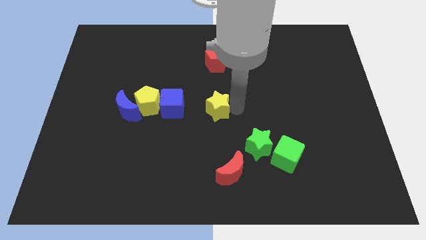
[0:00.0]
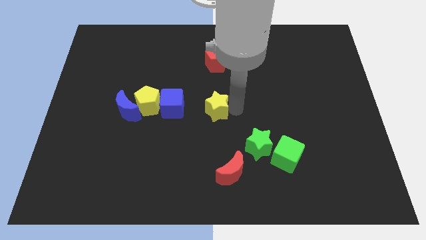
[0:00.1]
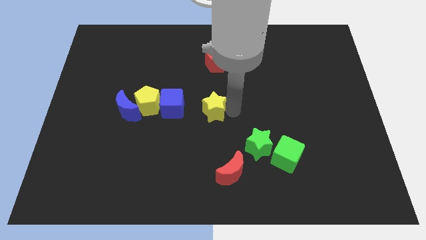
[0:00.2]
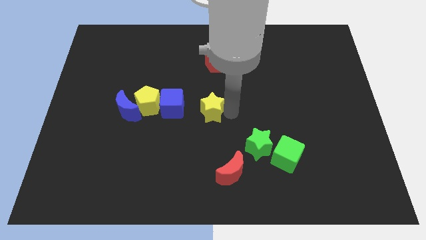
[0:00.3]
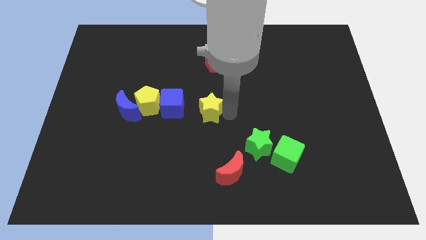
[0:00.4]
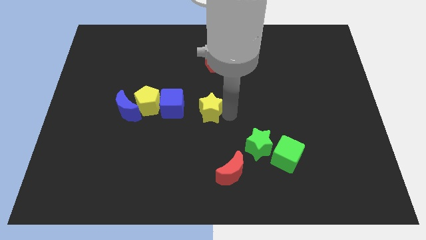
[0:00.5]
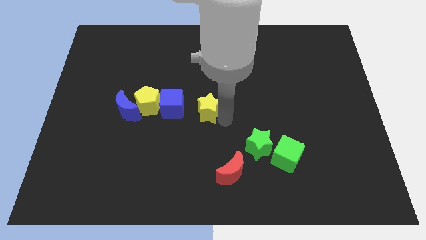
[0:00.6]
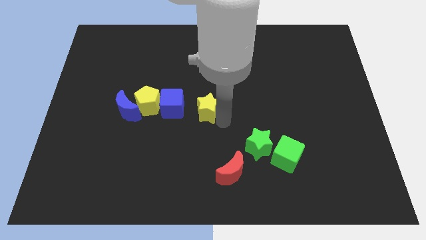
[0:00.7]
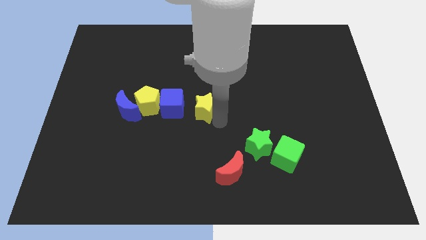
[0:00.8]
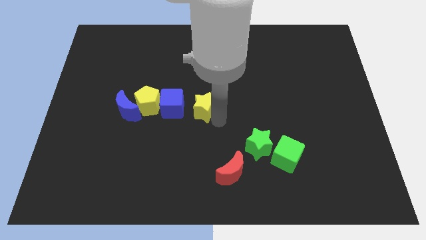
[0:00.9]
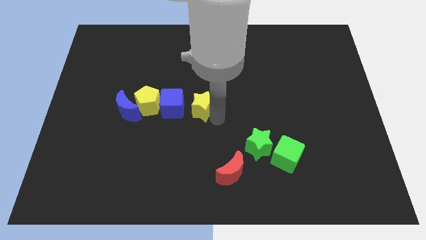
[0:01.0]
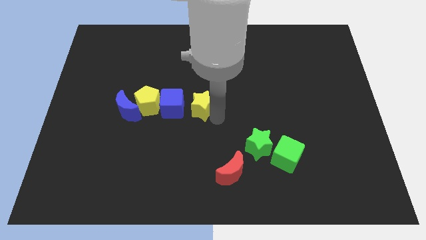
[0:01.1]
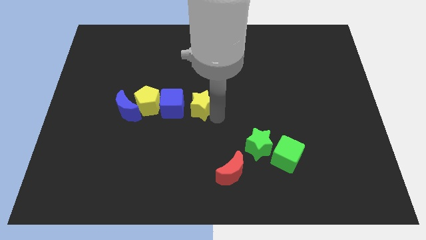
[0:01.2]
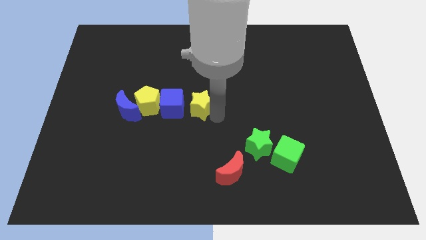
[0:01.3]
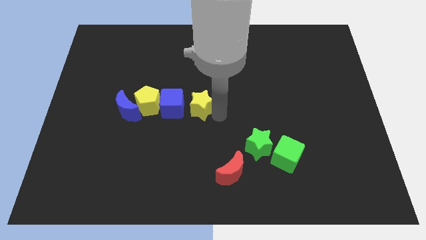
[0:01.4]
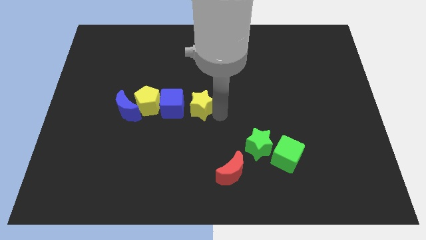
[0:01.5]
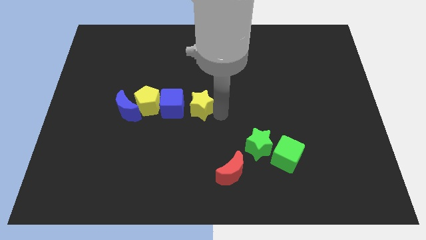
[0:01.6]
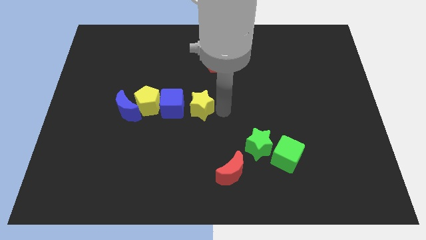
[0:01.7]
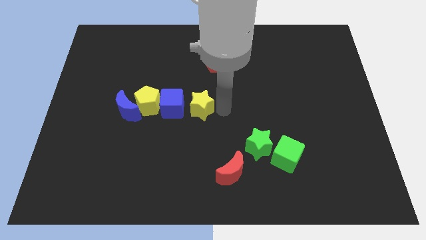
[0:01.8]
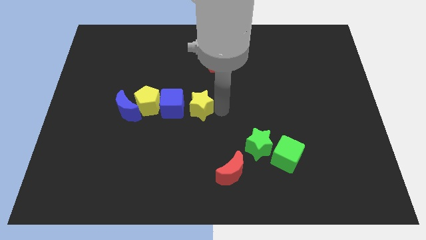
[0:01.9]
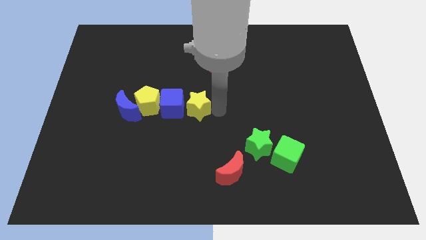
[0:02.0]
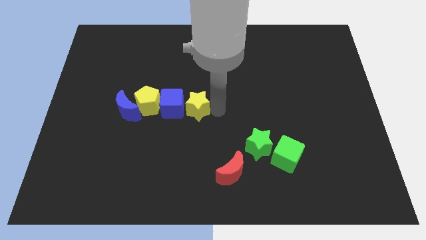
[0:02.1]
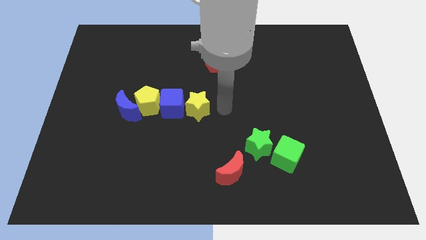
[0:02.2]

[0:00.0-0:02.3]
move the yellow star right to the blue cube

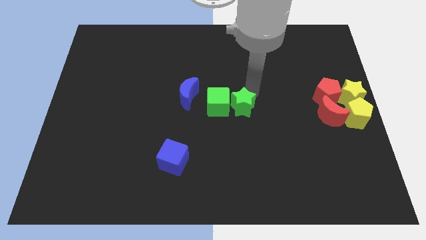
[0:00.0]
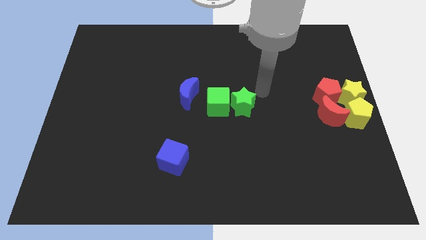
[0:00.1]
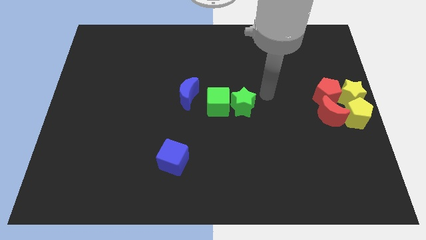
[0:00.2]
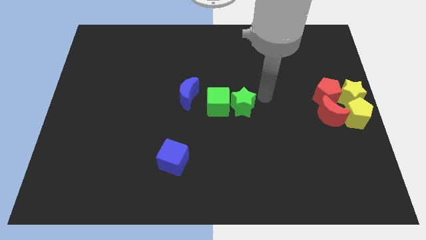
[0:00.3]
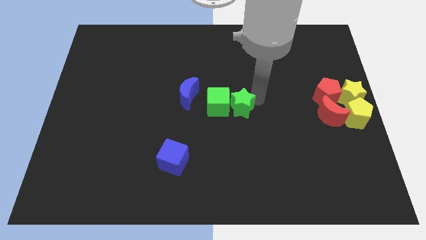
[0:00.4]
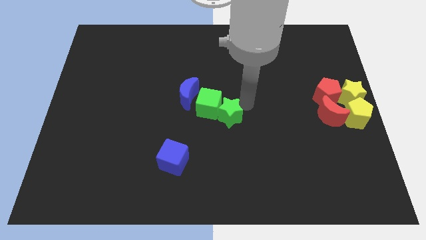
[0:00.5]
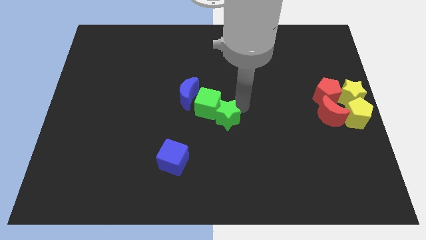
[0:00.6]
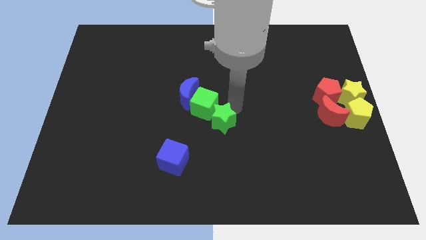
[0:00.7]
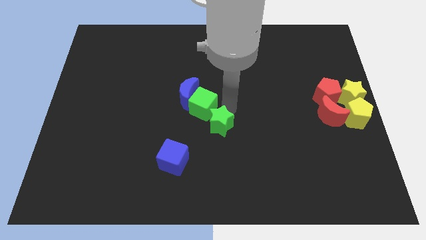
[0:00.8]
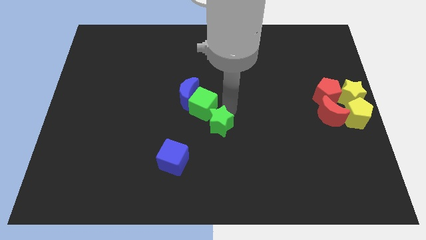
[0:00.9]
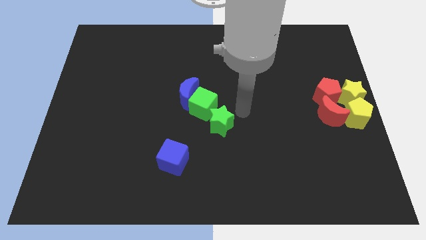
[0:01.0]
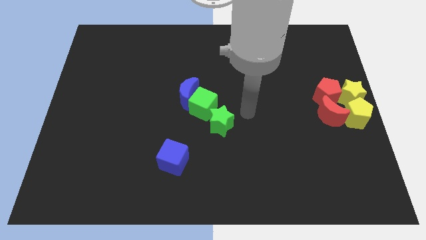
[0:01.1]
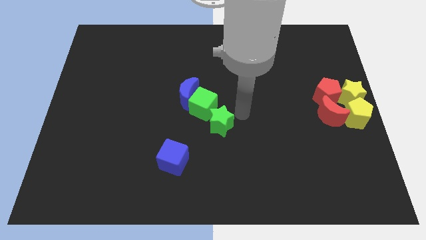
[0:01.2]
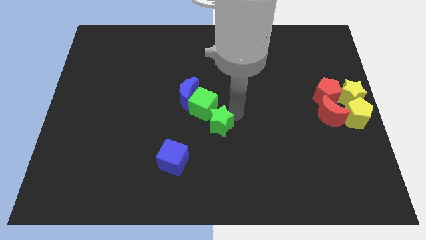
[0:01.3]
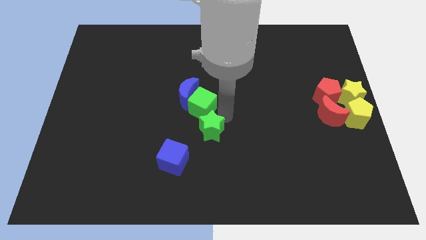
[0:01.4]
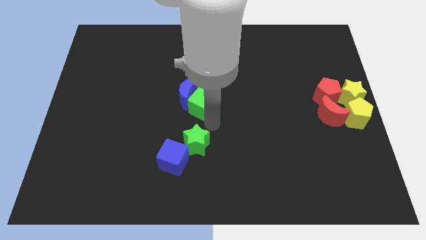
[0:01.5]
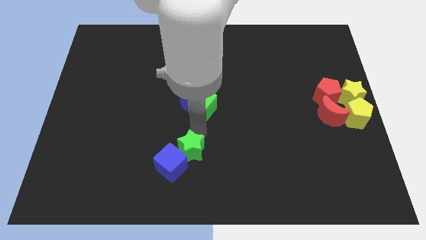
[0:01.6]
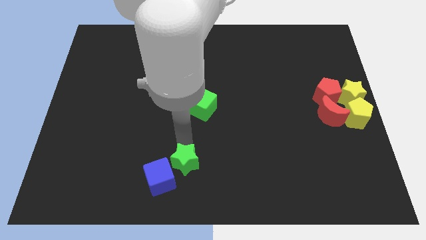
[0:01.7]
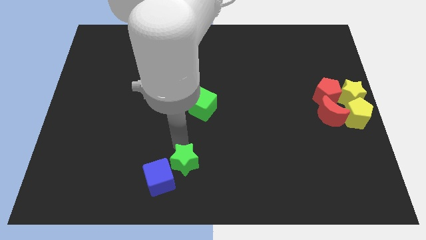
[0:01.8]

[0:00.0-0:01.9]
separate green star from the green cube

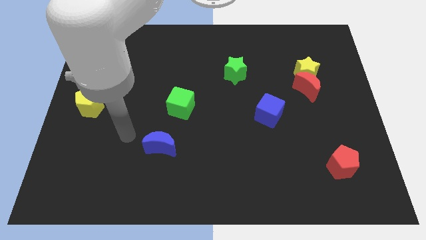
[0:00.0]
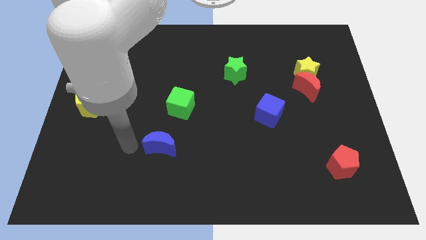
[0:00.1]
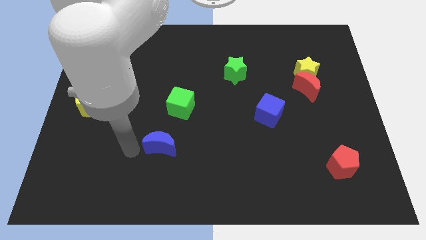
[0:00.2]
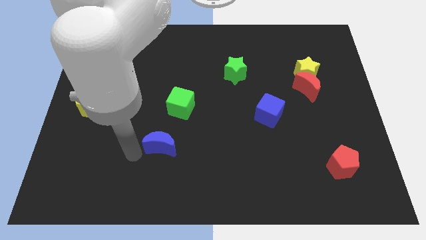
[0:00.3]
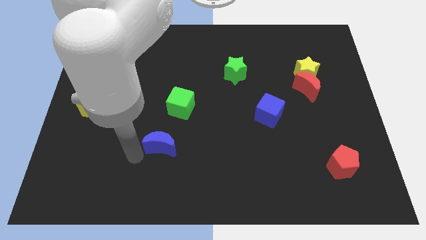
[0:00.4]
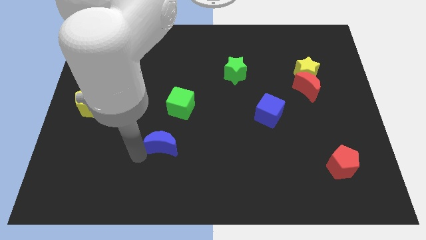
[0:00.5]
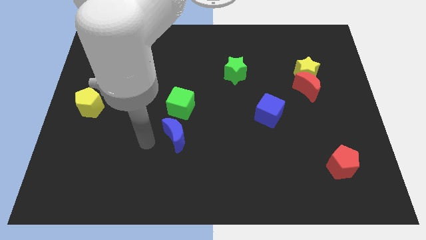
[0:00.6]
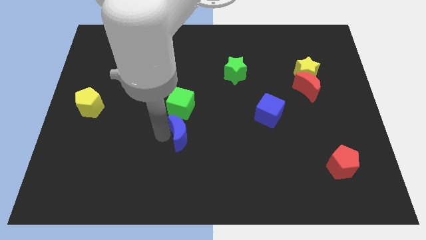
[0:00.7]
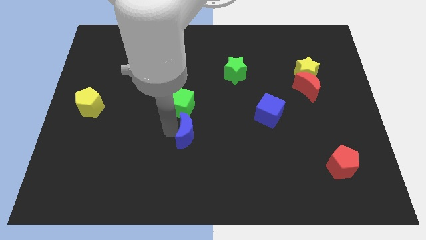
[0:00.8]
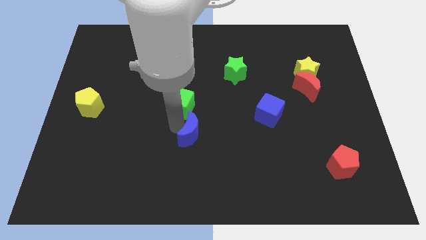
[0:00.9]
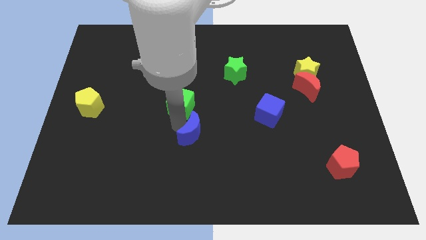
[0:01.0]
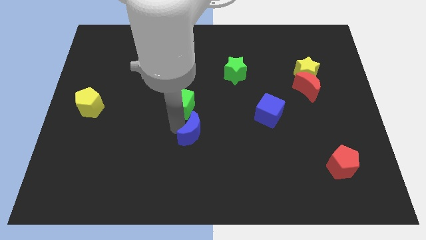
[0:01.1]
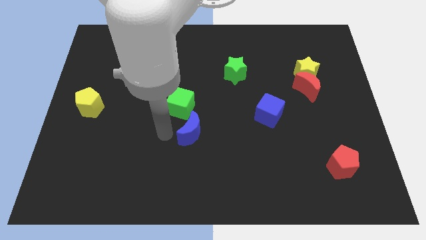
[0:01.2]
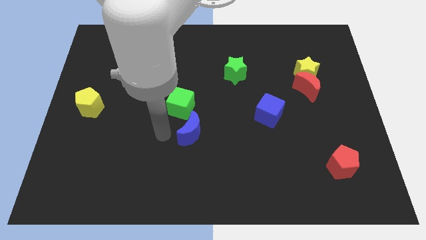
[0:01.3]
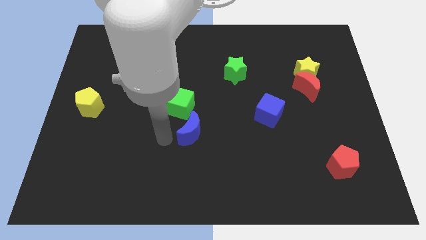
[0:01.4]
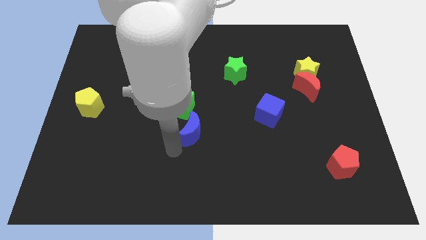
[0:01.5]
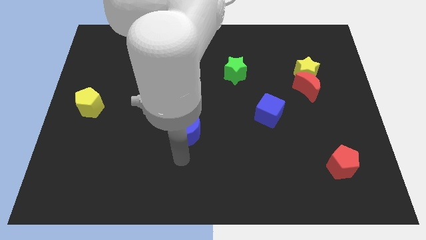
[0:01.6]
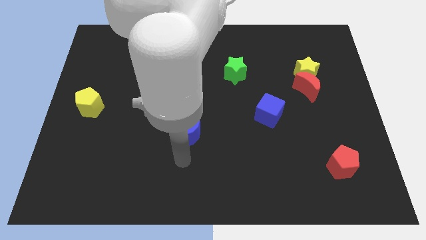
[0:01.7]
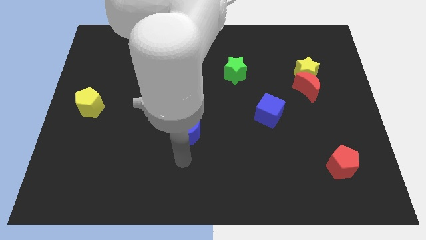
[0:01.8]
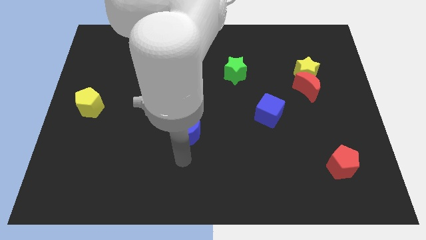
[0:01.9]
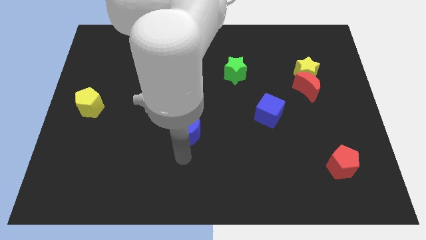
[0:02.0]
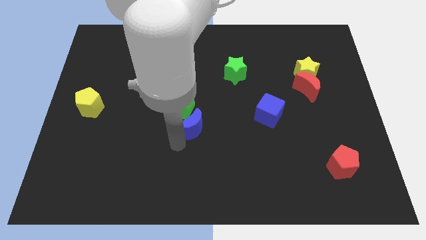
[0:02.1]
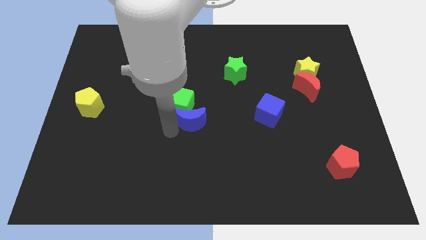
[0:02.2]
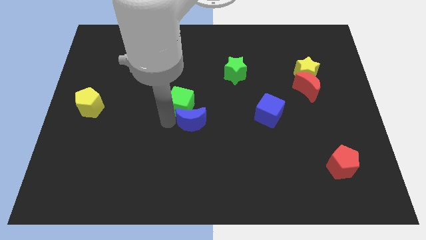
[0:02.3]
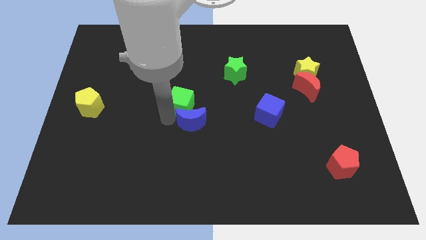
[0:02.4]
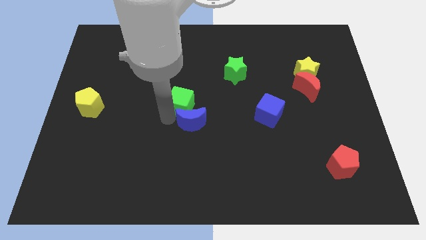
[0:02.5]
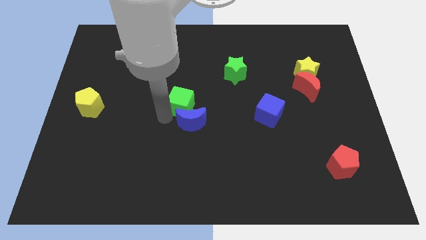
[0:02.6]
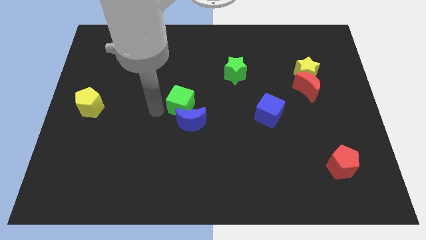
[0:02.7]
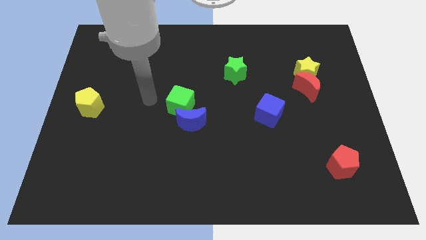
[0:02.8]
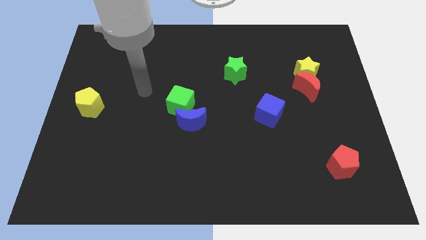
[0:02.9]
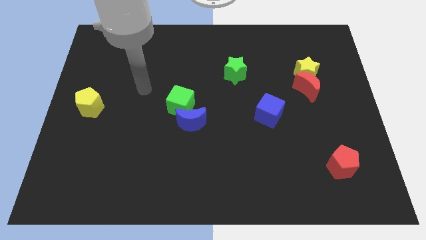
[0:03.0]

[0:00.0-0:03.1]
push blue moon to green cube

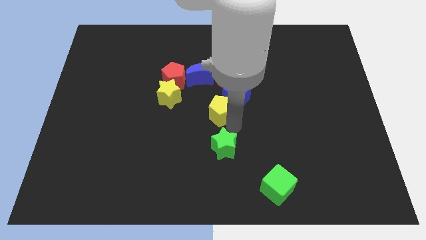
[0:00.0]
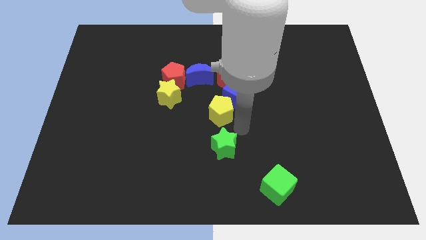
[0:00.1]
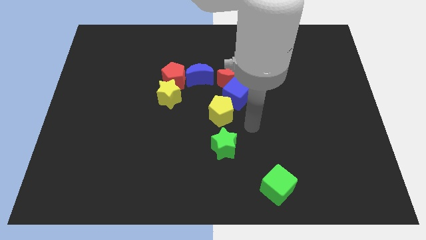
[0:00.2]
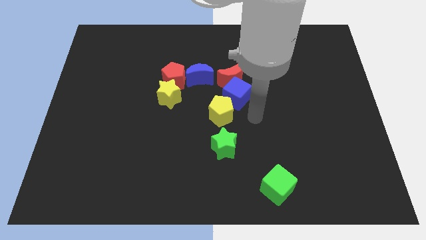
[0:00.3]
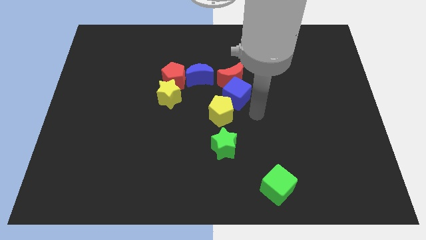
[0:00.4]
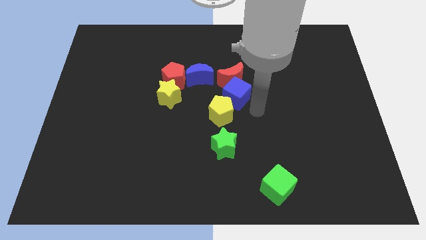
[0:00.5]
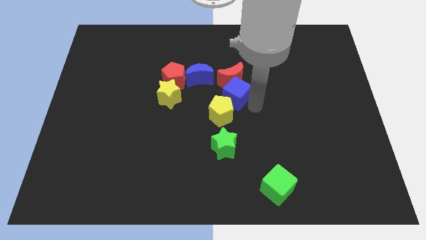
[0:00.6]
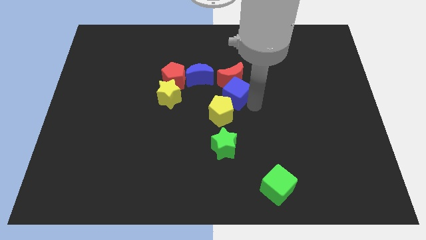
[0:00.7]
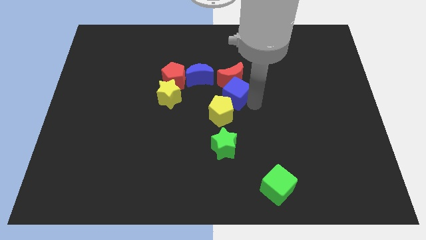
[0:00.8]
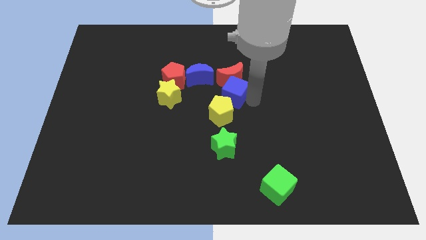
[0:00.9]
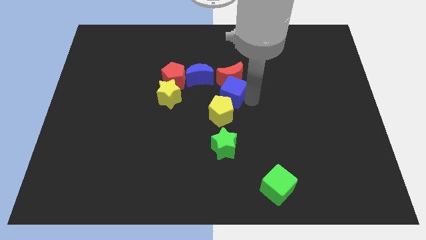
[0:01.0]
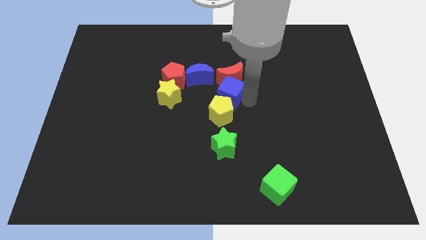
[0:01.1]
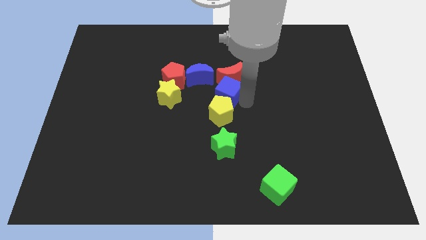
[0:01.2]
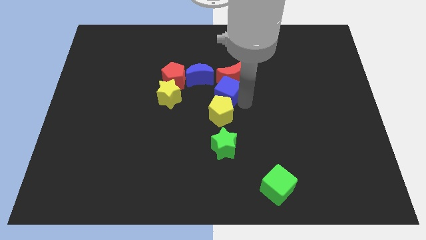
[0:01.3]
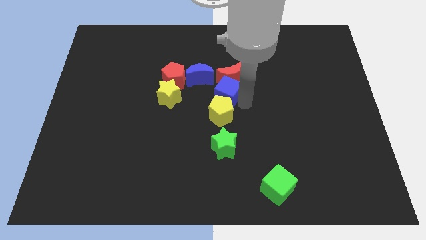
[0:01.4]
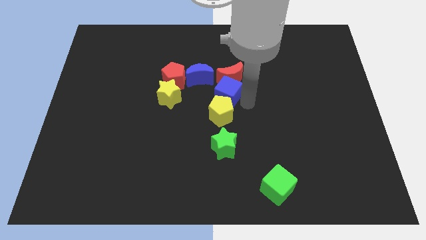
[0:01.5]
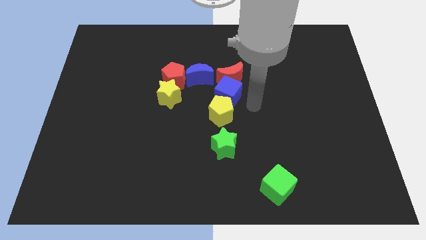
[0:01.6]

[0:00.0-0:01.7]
place the blue cube in between the yellow star and red crescent

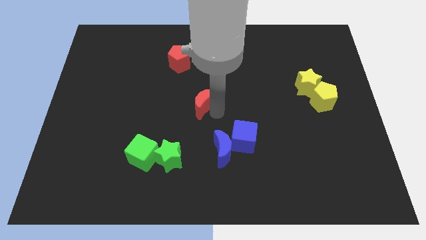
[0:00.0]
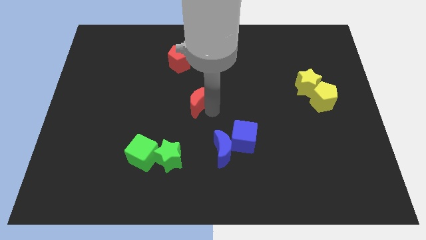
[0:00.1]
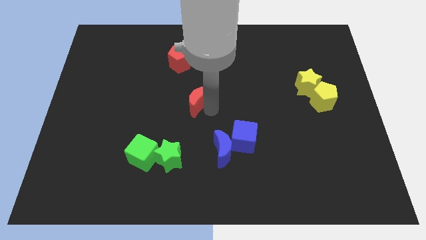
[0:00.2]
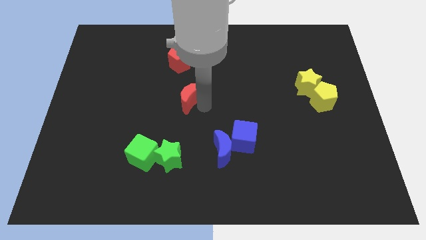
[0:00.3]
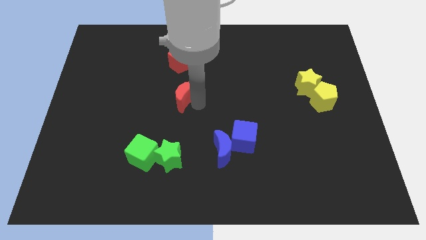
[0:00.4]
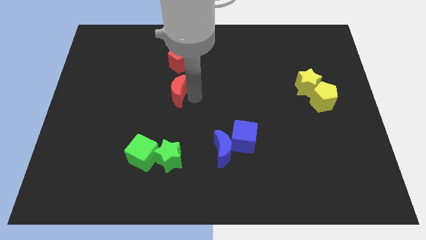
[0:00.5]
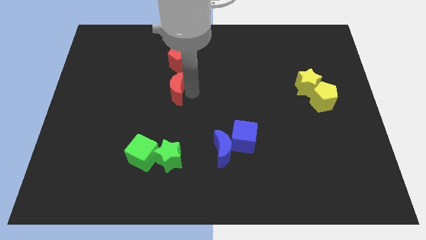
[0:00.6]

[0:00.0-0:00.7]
move red moon below red pentagon
